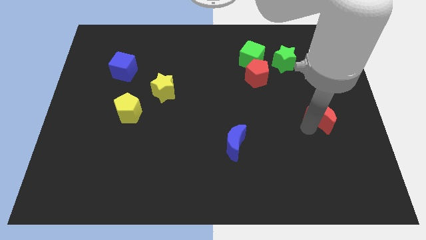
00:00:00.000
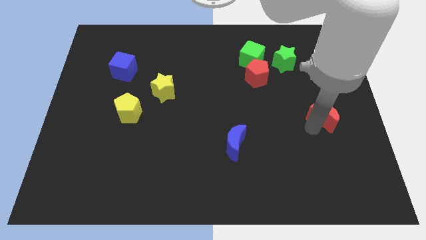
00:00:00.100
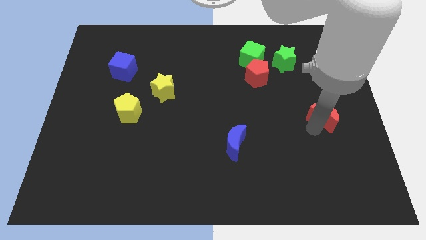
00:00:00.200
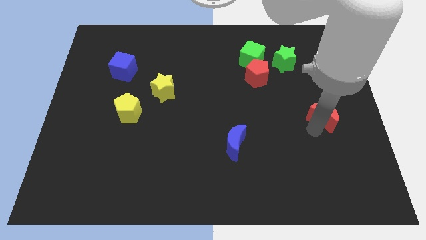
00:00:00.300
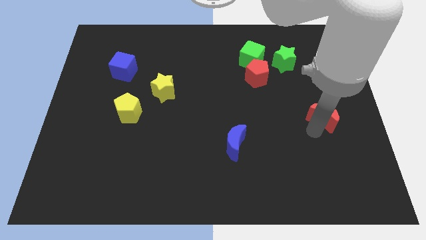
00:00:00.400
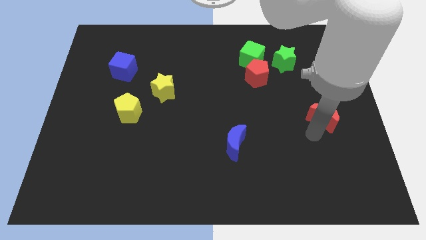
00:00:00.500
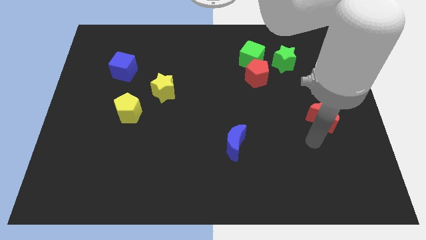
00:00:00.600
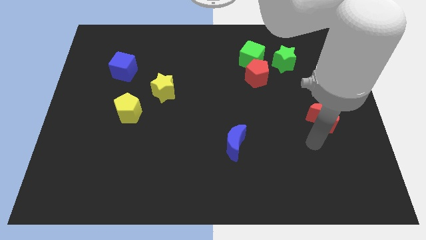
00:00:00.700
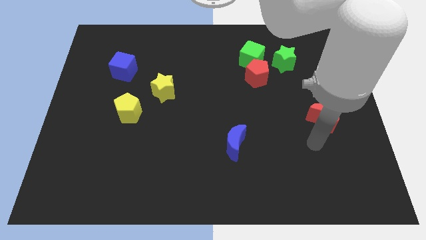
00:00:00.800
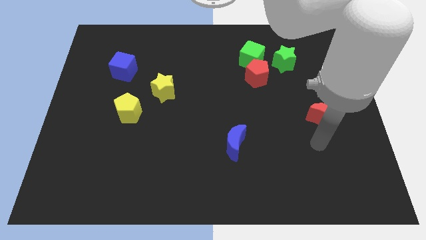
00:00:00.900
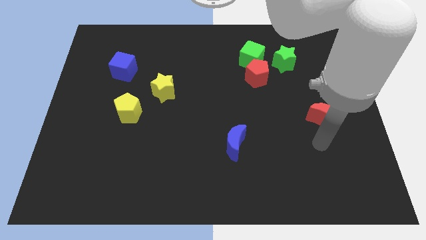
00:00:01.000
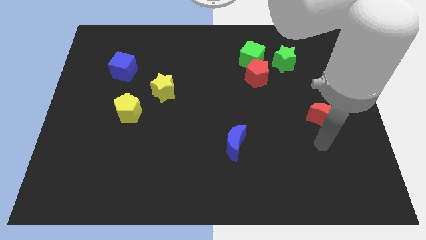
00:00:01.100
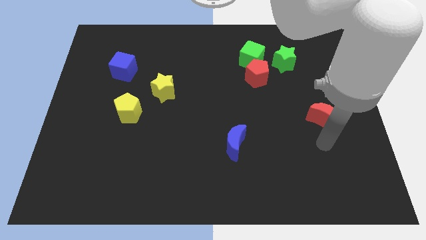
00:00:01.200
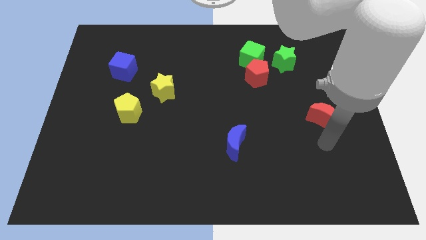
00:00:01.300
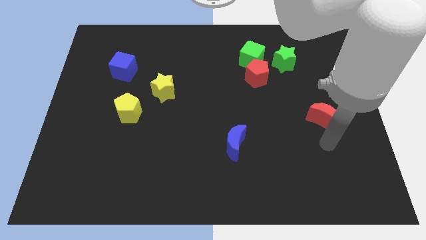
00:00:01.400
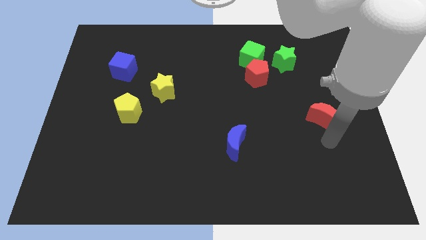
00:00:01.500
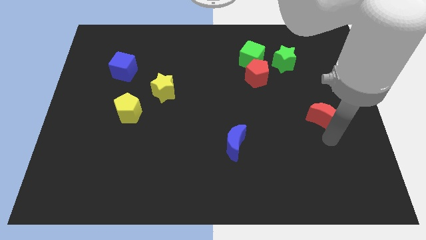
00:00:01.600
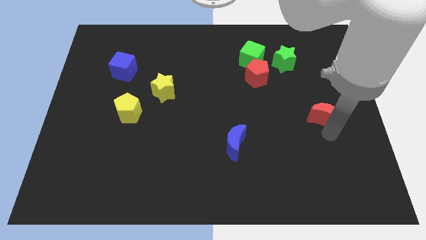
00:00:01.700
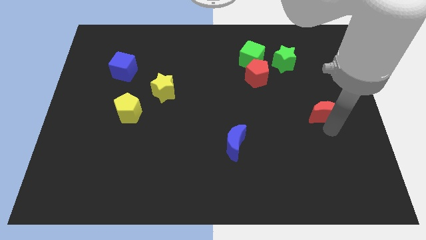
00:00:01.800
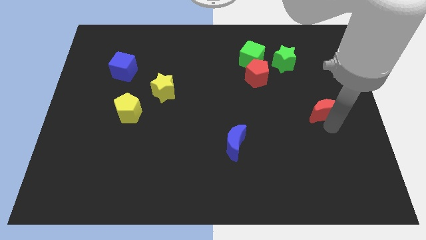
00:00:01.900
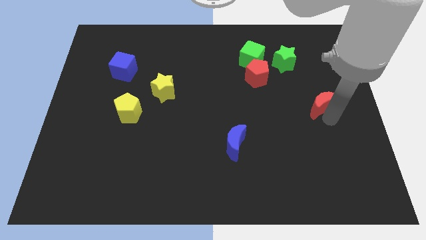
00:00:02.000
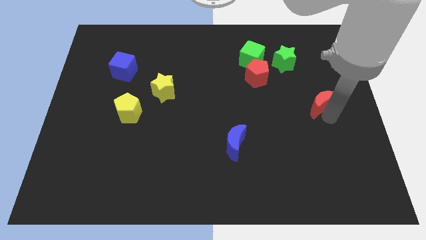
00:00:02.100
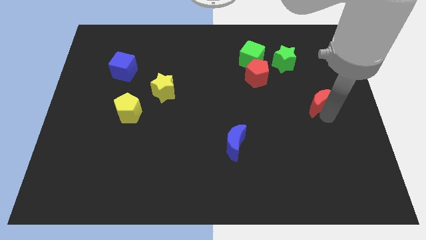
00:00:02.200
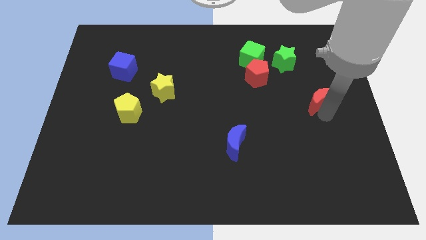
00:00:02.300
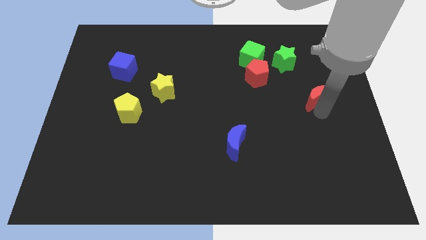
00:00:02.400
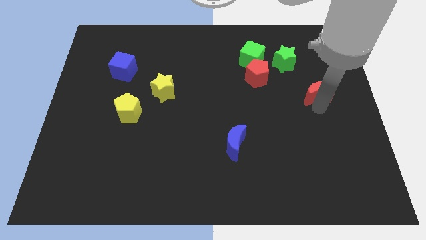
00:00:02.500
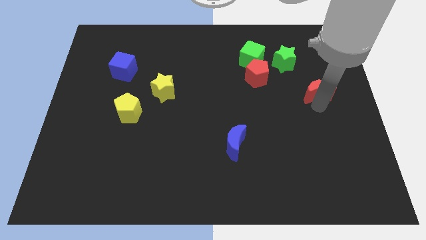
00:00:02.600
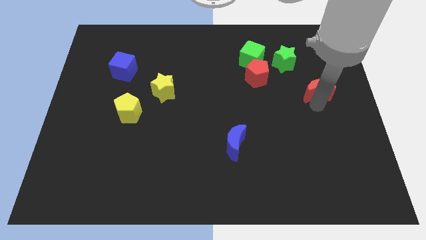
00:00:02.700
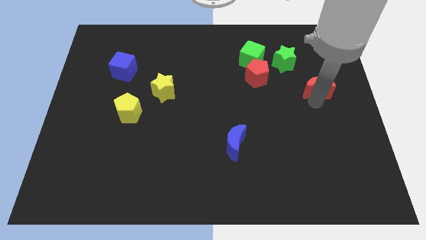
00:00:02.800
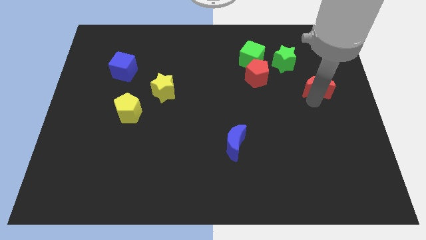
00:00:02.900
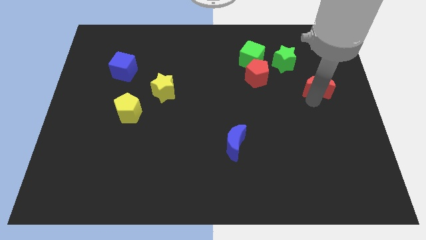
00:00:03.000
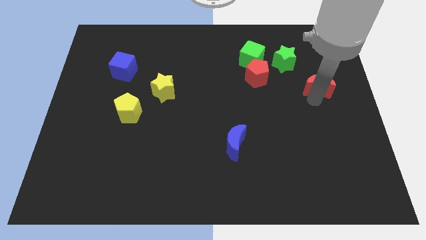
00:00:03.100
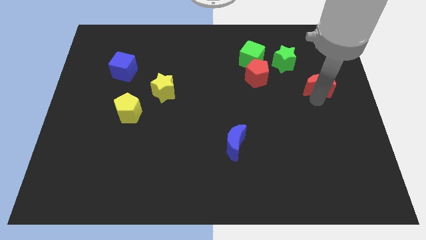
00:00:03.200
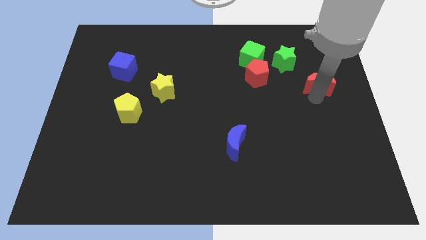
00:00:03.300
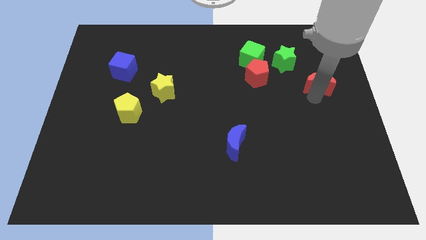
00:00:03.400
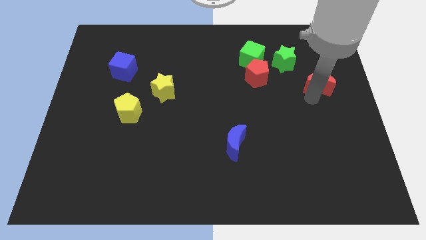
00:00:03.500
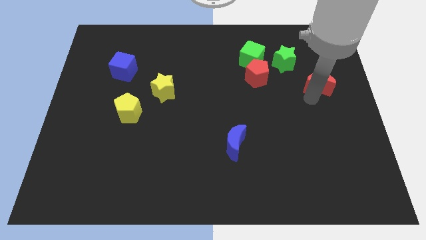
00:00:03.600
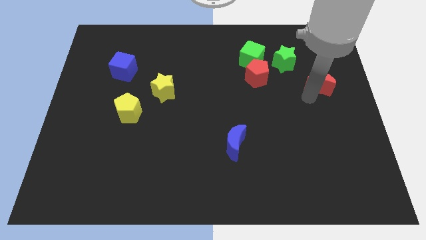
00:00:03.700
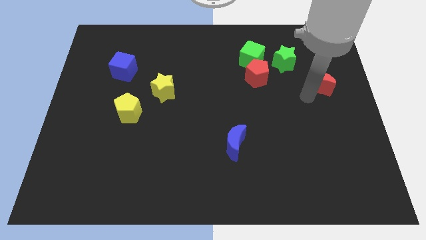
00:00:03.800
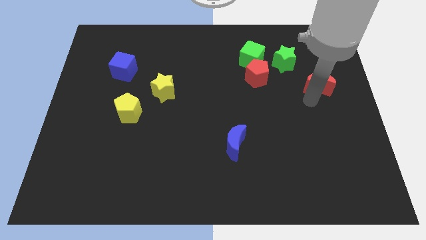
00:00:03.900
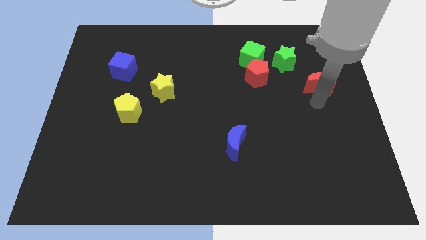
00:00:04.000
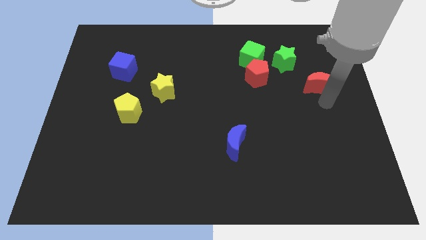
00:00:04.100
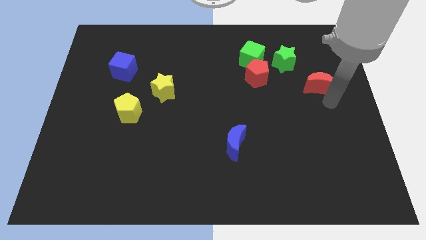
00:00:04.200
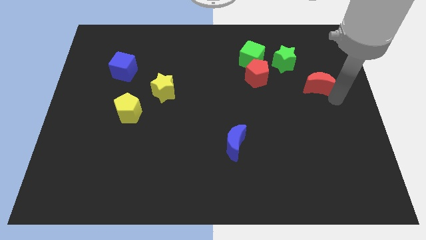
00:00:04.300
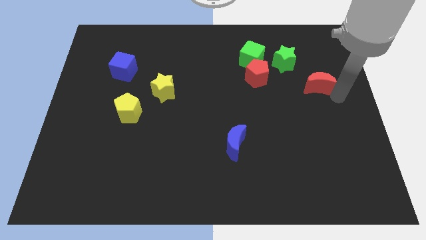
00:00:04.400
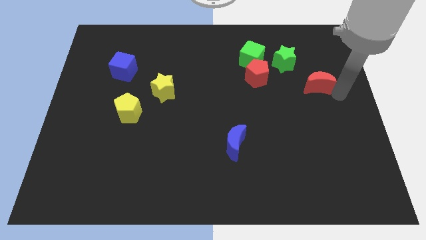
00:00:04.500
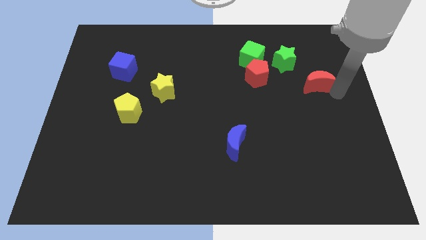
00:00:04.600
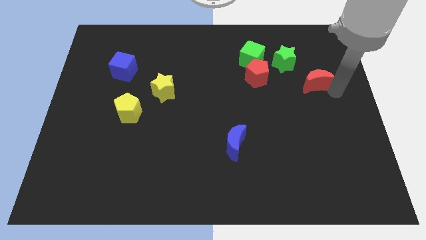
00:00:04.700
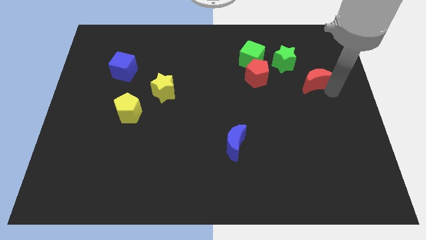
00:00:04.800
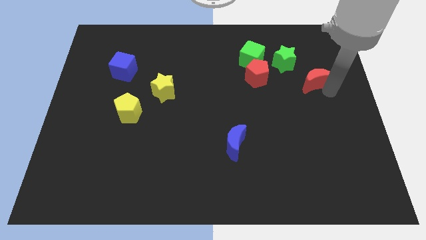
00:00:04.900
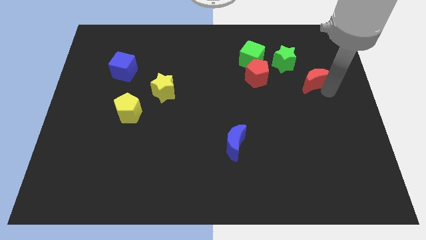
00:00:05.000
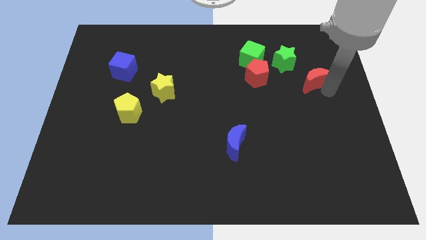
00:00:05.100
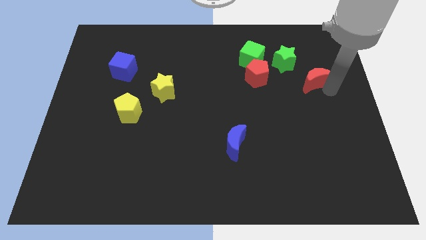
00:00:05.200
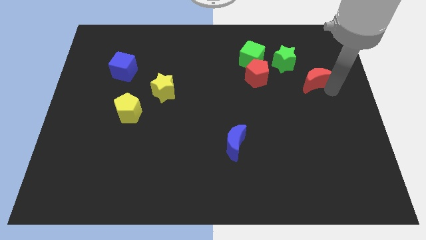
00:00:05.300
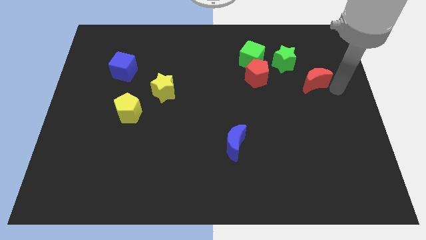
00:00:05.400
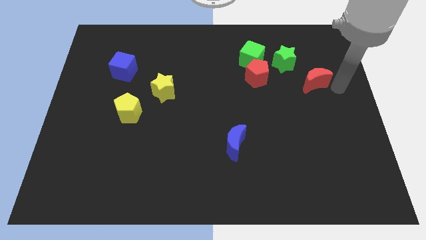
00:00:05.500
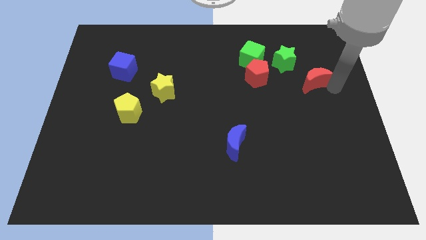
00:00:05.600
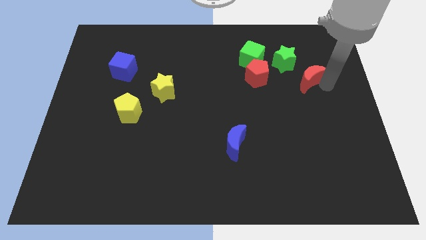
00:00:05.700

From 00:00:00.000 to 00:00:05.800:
push the red crescent towards the green star

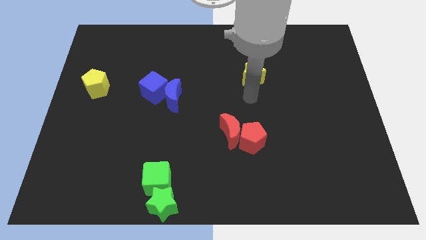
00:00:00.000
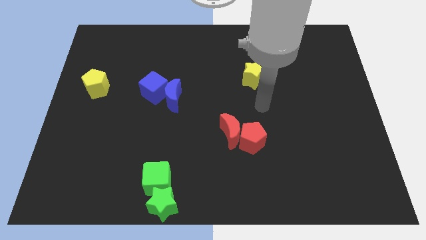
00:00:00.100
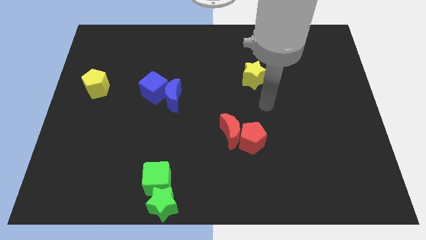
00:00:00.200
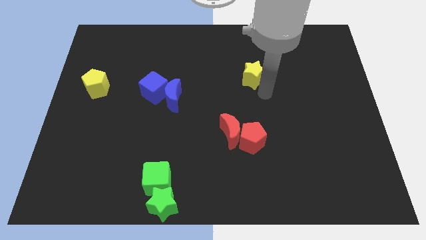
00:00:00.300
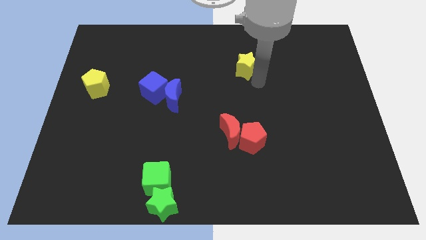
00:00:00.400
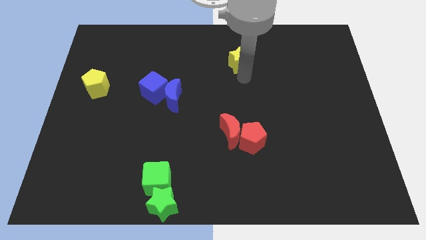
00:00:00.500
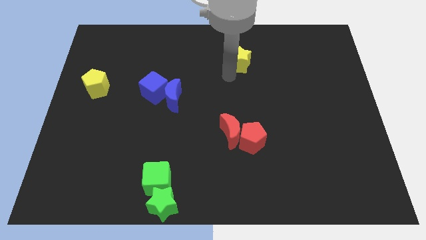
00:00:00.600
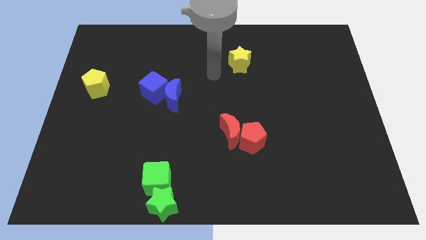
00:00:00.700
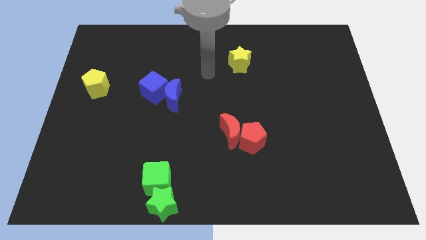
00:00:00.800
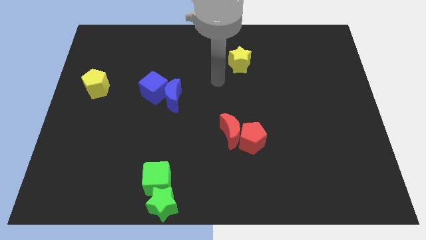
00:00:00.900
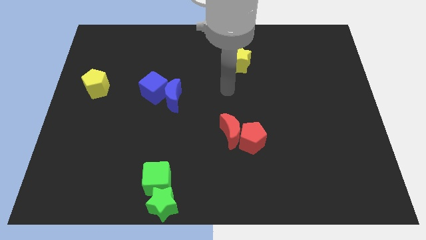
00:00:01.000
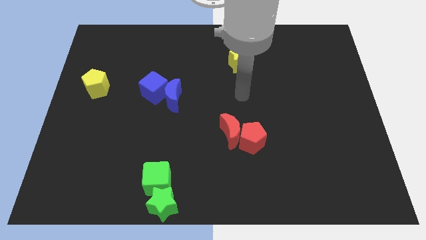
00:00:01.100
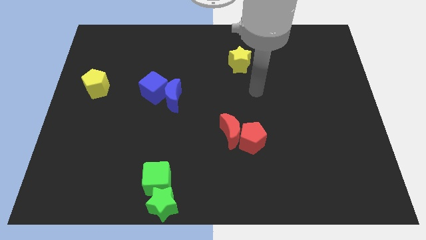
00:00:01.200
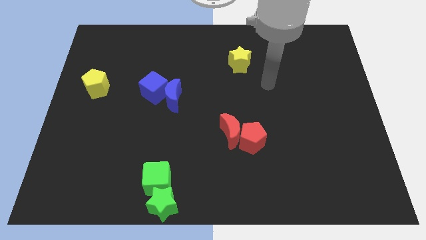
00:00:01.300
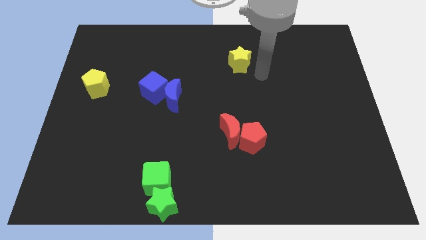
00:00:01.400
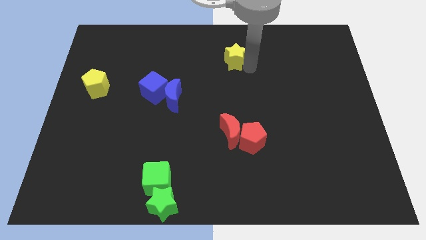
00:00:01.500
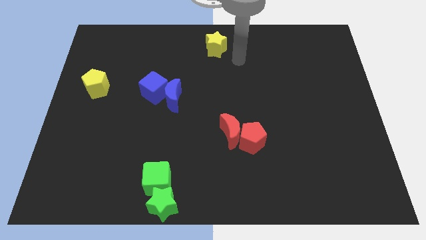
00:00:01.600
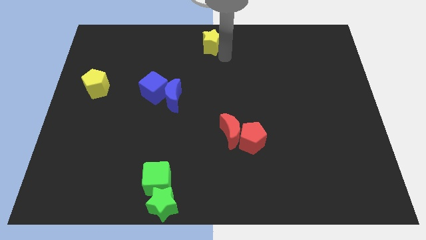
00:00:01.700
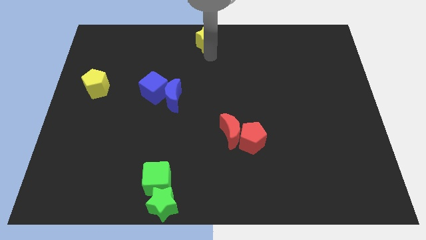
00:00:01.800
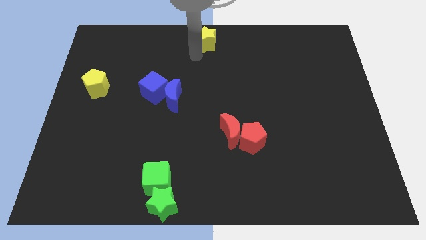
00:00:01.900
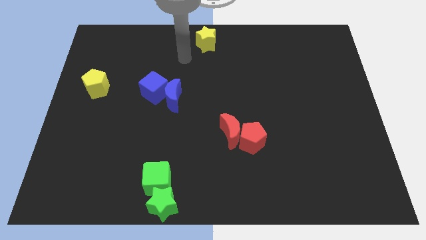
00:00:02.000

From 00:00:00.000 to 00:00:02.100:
put the yellow star diagonally to yellow pentagon

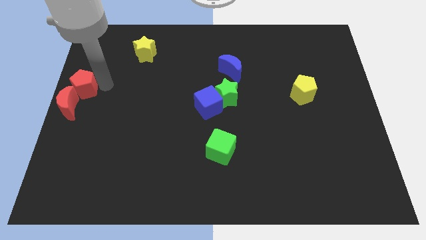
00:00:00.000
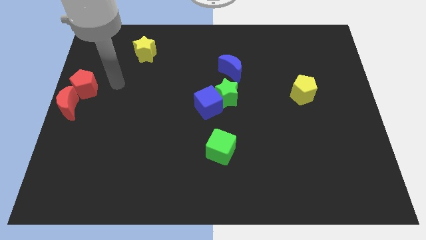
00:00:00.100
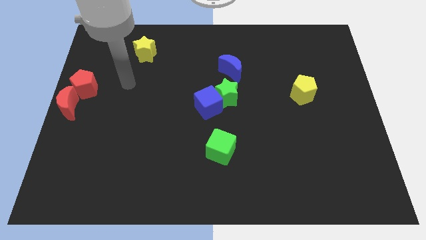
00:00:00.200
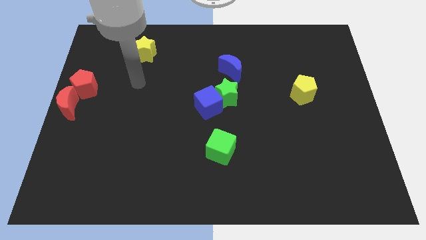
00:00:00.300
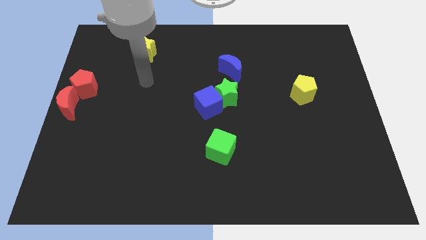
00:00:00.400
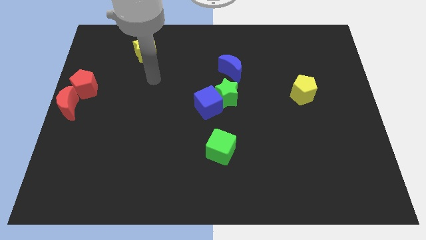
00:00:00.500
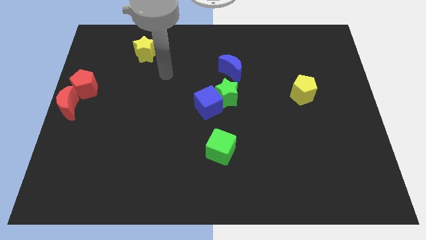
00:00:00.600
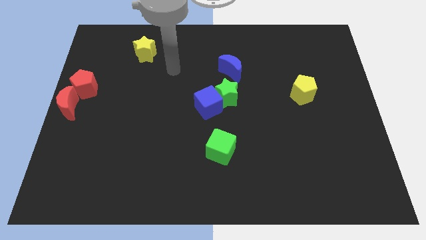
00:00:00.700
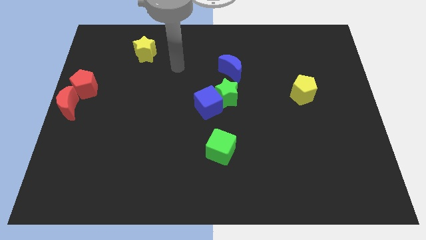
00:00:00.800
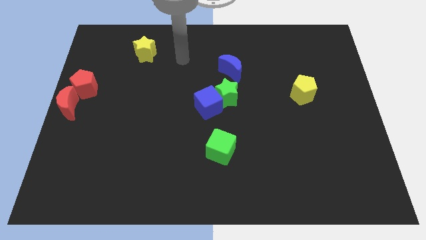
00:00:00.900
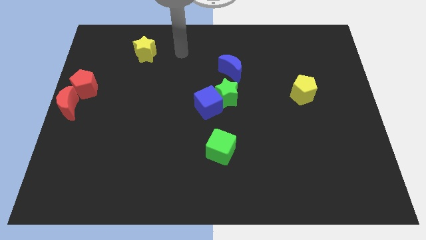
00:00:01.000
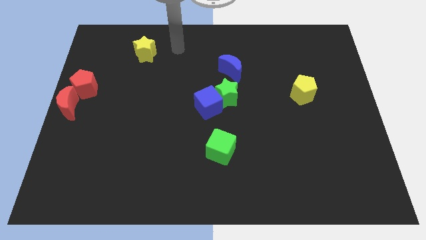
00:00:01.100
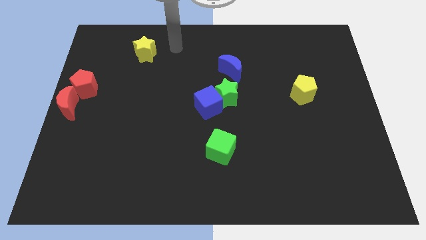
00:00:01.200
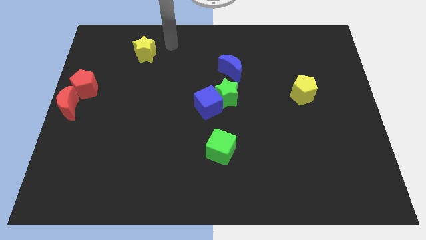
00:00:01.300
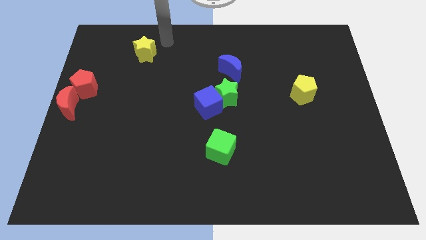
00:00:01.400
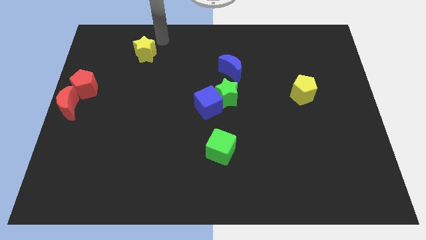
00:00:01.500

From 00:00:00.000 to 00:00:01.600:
move your arm away from the red pentagon
